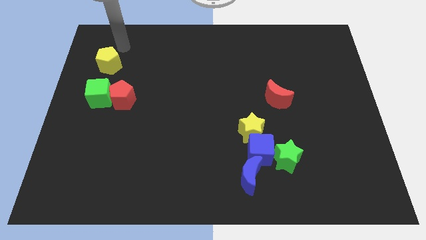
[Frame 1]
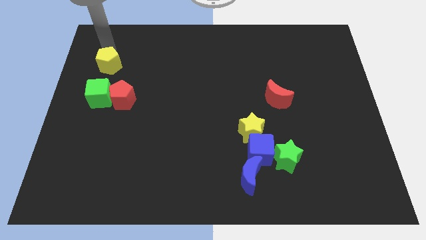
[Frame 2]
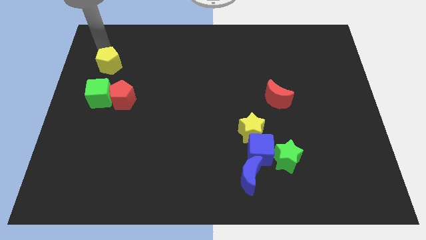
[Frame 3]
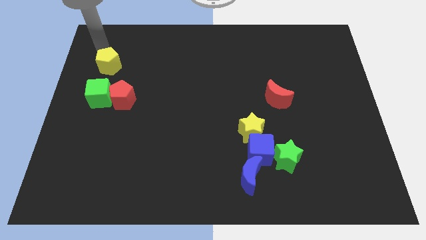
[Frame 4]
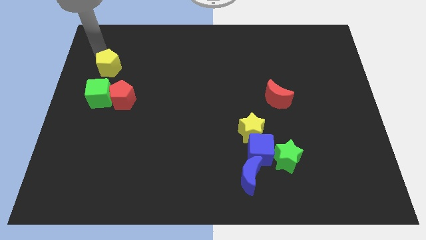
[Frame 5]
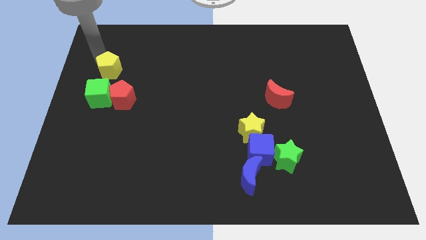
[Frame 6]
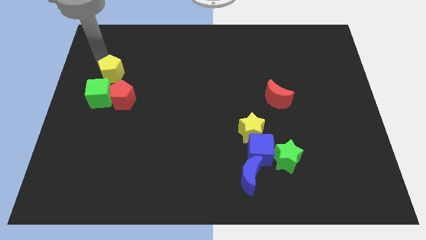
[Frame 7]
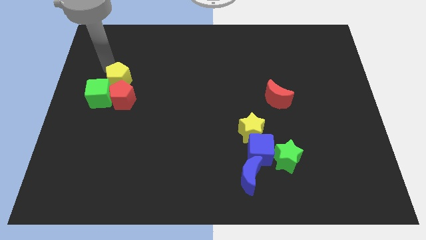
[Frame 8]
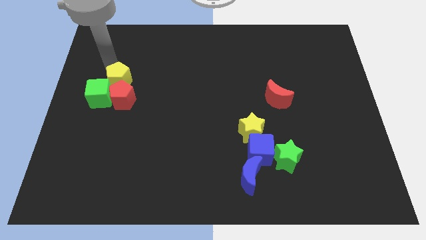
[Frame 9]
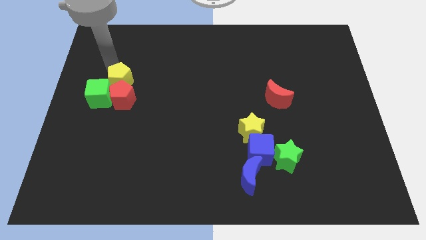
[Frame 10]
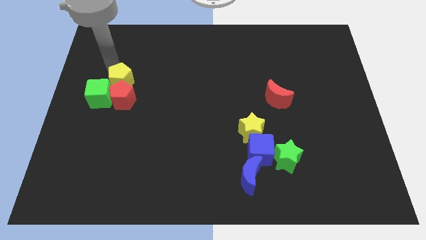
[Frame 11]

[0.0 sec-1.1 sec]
move yellow pentagon into red pentagon

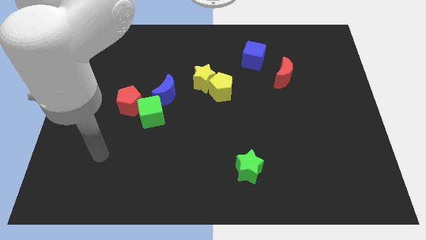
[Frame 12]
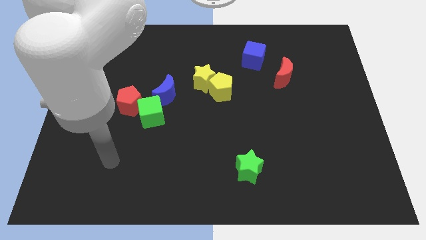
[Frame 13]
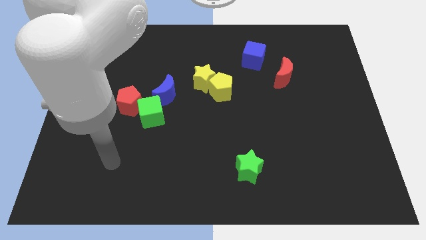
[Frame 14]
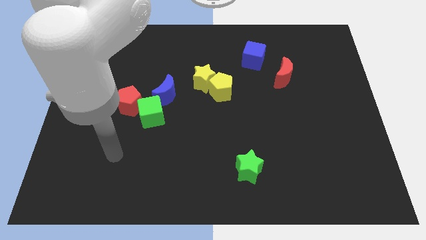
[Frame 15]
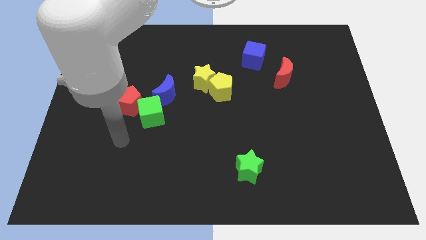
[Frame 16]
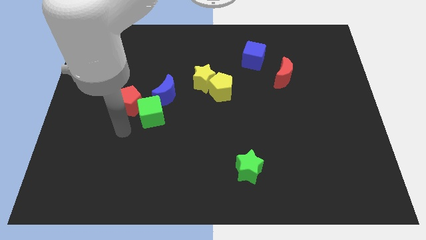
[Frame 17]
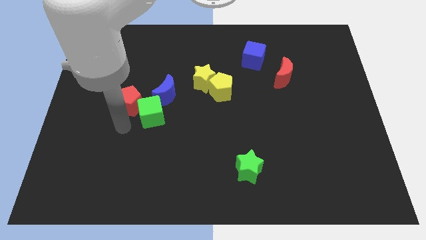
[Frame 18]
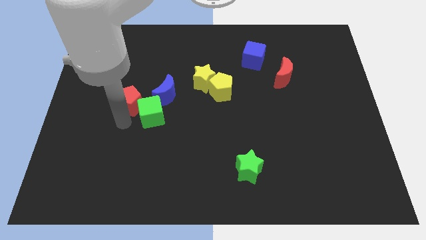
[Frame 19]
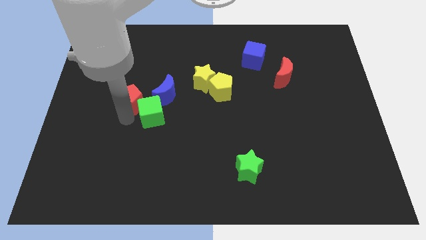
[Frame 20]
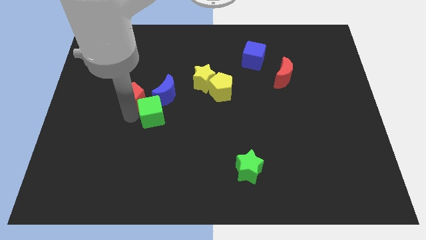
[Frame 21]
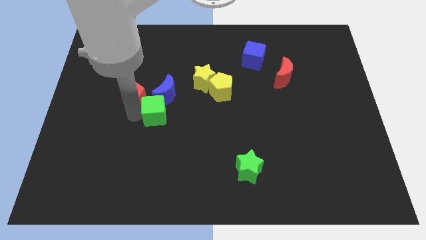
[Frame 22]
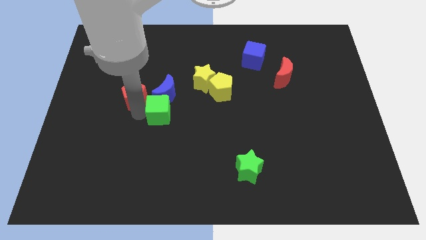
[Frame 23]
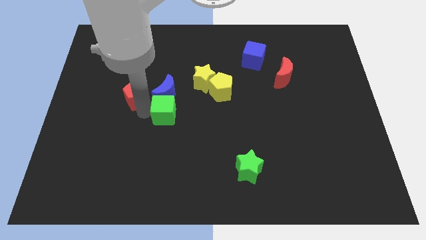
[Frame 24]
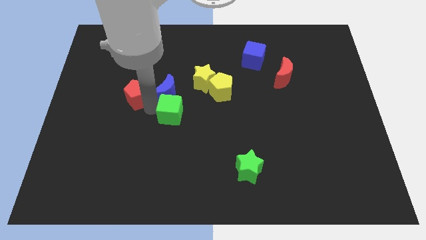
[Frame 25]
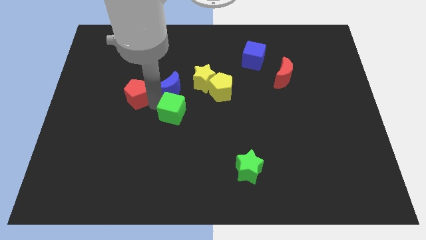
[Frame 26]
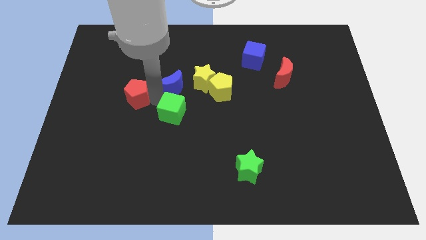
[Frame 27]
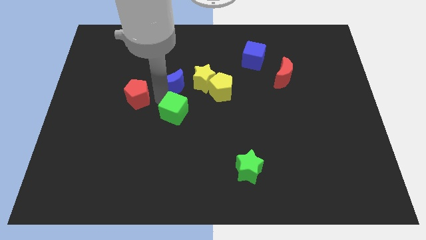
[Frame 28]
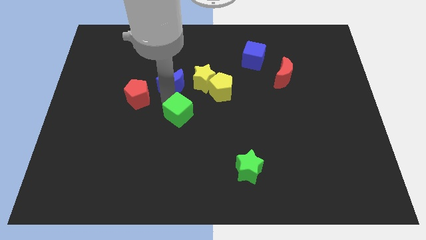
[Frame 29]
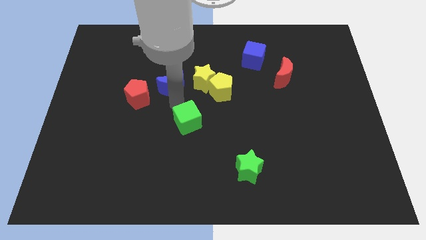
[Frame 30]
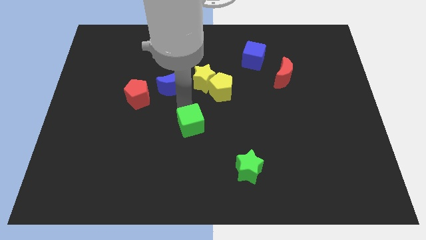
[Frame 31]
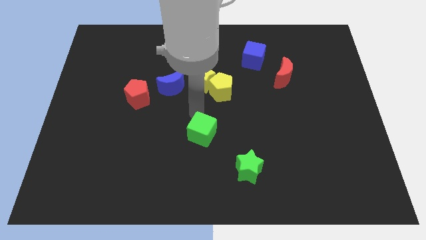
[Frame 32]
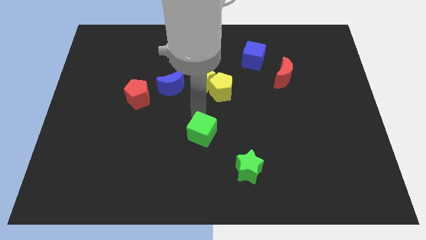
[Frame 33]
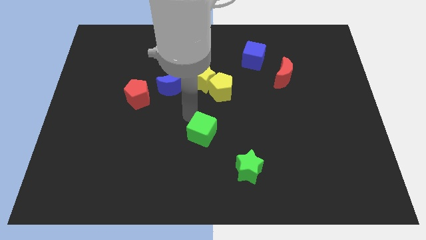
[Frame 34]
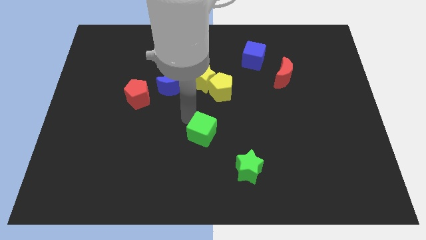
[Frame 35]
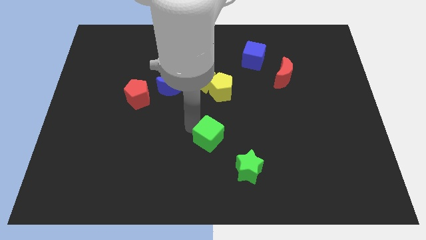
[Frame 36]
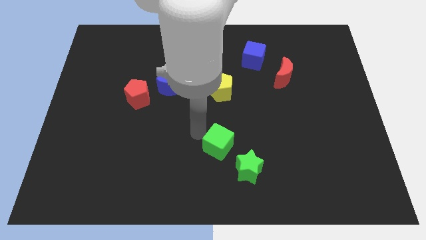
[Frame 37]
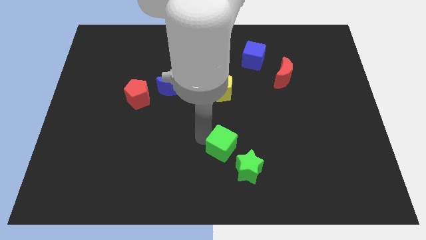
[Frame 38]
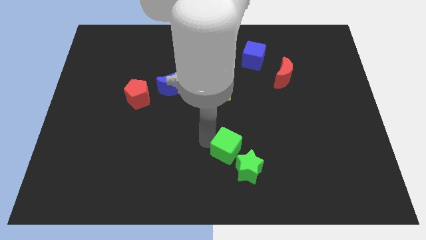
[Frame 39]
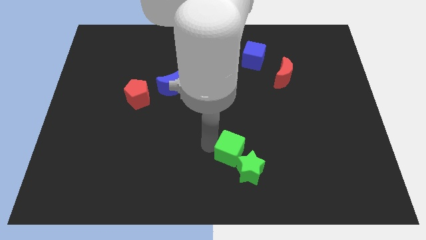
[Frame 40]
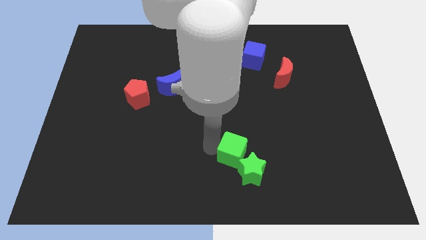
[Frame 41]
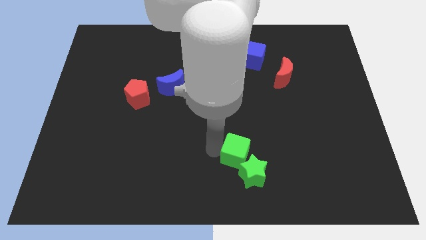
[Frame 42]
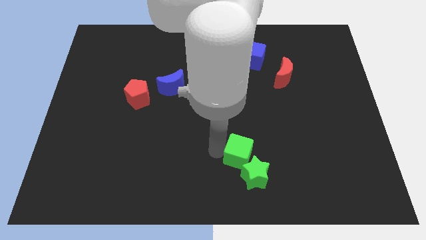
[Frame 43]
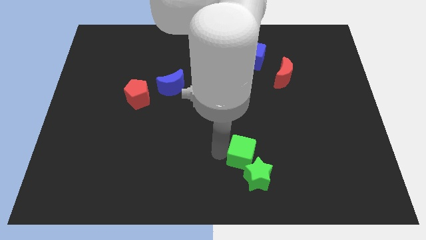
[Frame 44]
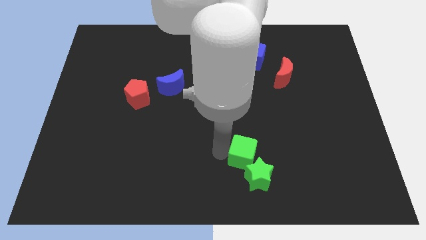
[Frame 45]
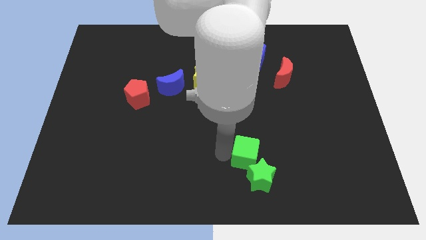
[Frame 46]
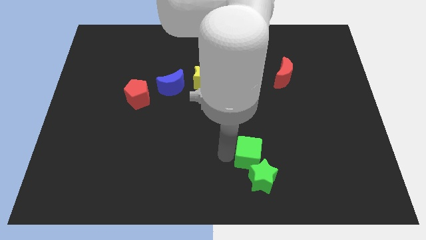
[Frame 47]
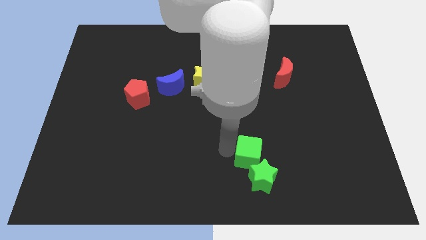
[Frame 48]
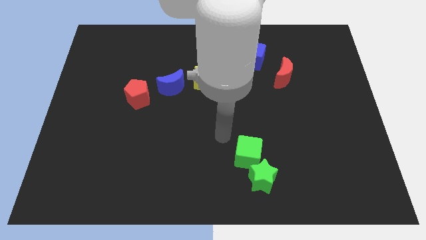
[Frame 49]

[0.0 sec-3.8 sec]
push the green cube into the green star

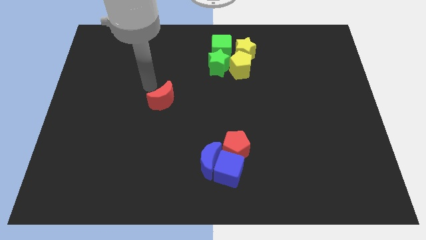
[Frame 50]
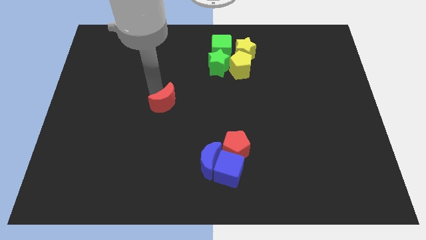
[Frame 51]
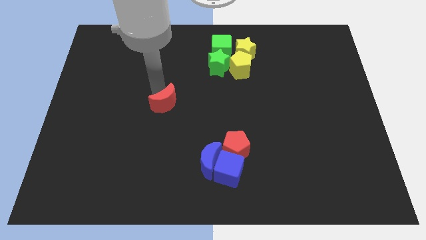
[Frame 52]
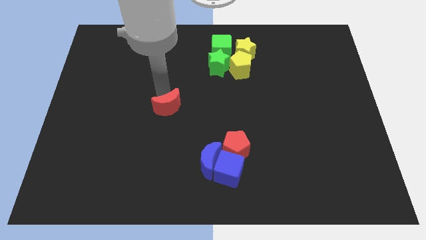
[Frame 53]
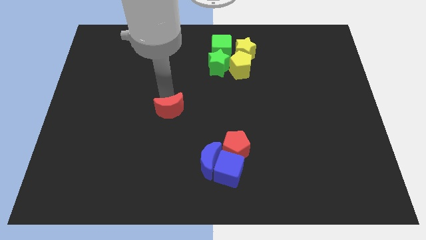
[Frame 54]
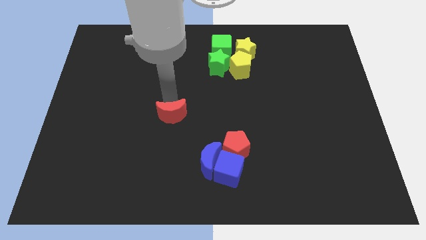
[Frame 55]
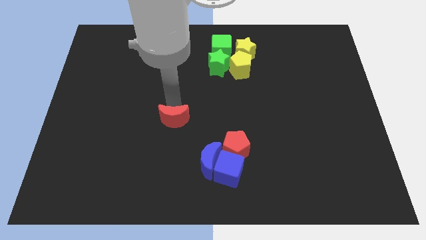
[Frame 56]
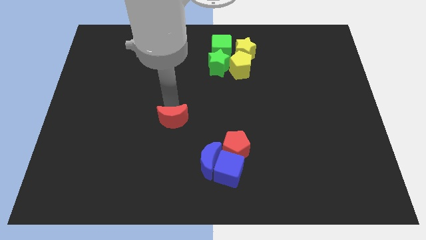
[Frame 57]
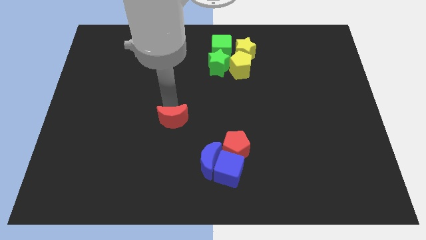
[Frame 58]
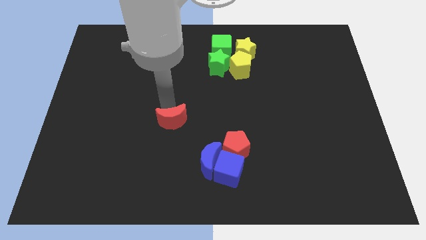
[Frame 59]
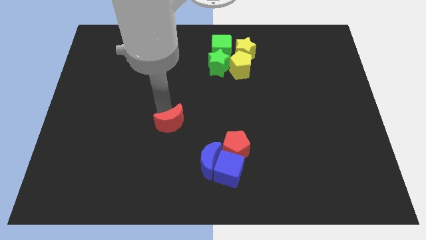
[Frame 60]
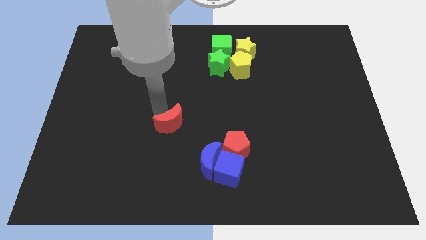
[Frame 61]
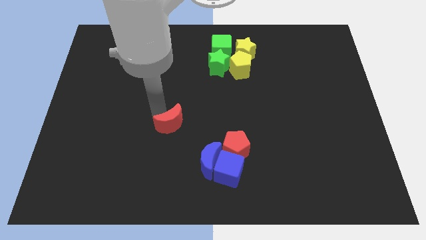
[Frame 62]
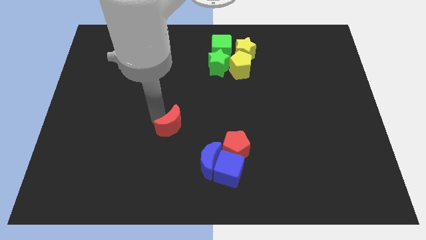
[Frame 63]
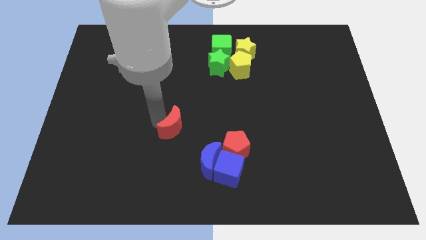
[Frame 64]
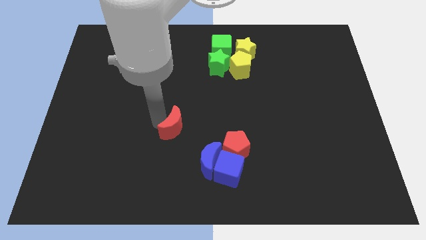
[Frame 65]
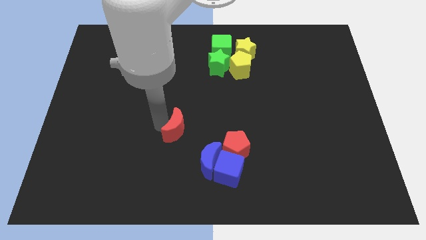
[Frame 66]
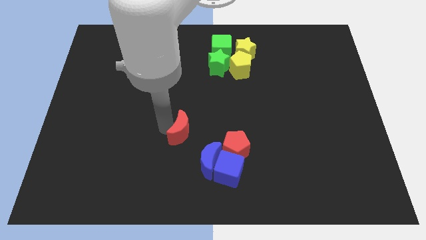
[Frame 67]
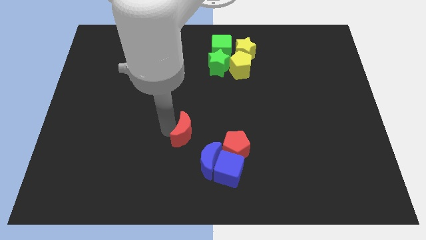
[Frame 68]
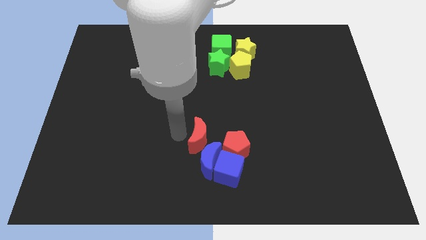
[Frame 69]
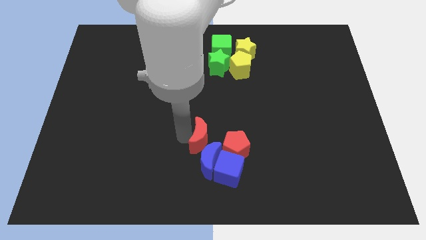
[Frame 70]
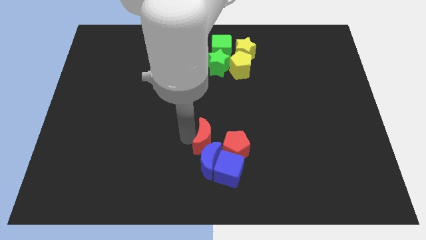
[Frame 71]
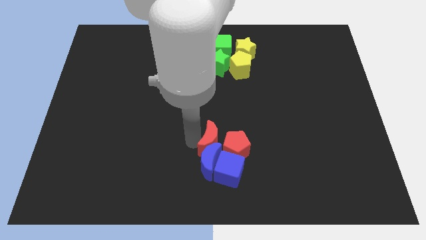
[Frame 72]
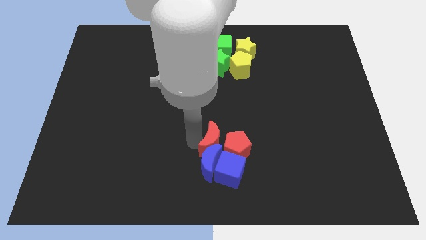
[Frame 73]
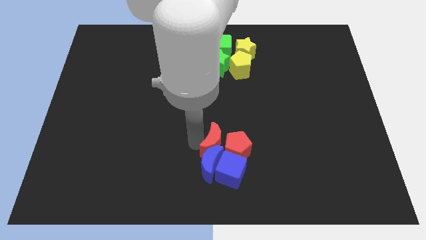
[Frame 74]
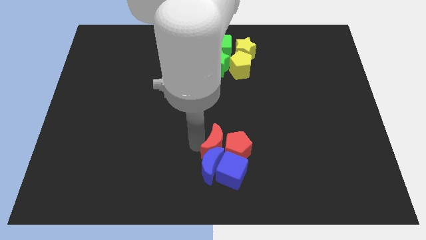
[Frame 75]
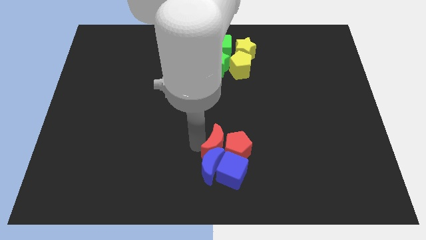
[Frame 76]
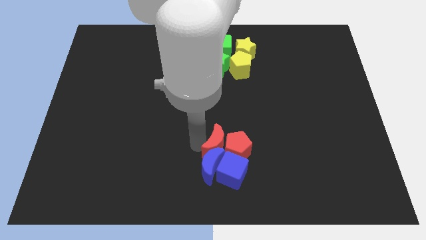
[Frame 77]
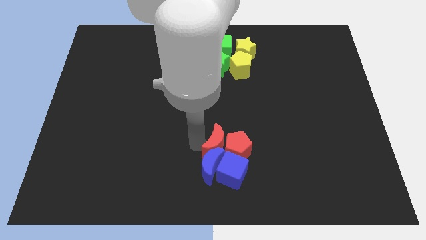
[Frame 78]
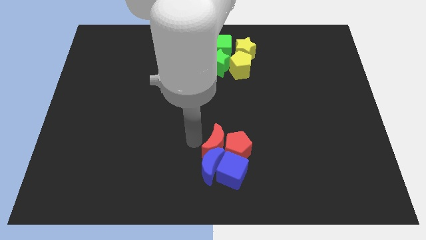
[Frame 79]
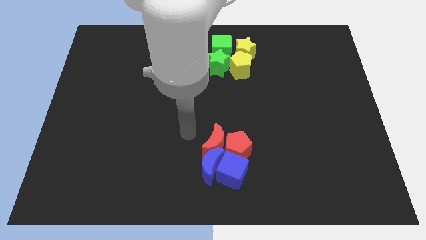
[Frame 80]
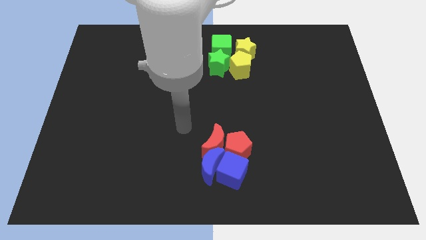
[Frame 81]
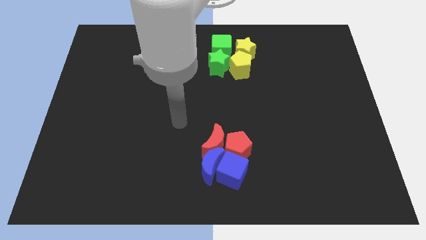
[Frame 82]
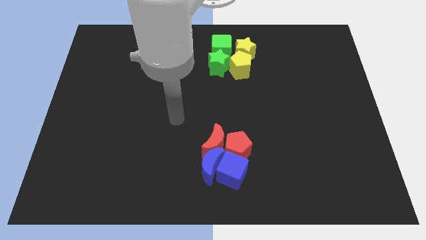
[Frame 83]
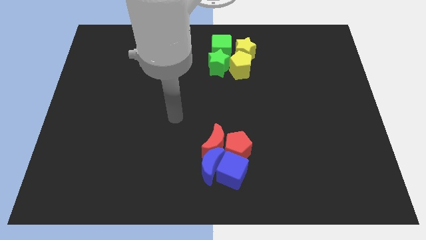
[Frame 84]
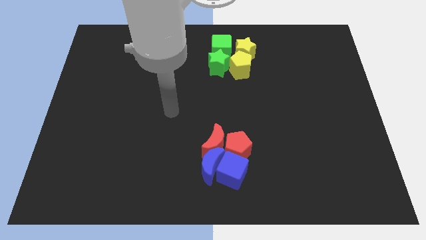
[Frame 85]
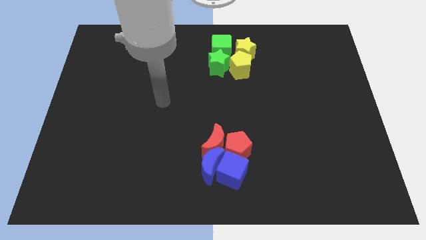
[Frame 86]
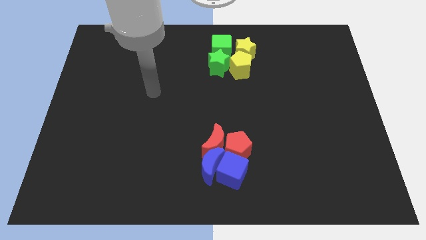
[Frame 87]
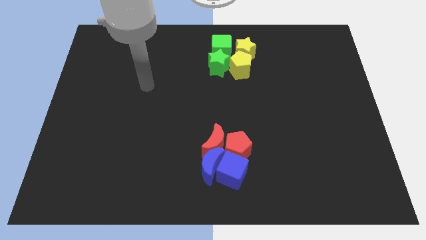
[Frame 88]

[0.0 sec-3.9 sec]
place the red moon left to the red pentagon

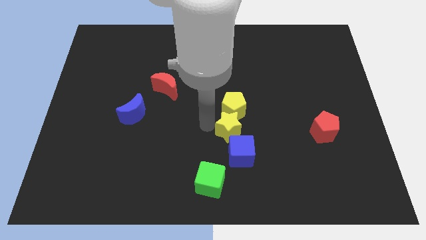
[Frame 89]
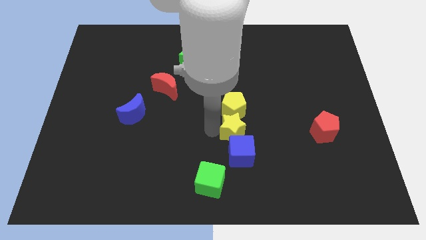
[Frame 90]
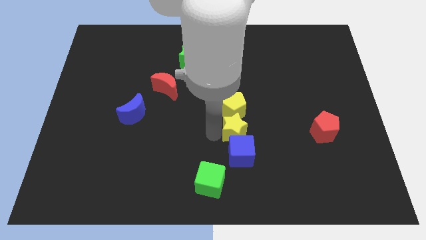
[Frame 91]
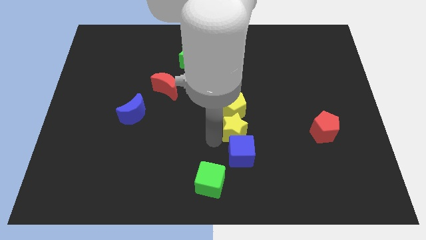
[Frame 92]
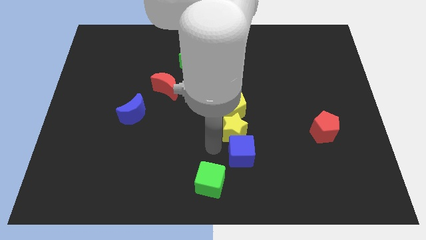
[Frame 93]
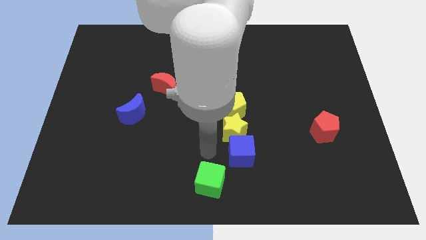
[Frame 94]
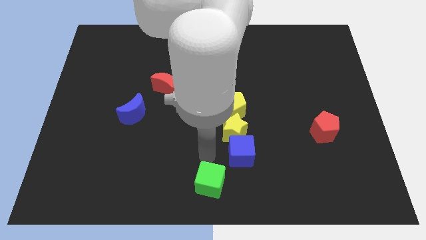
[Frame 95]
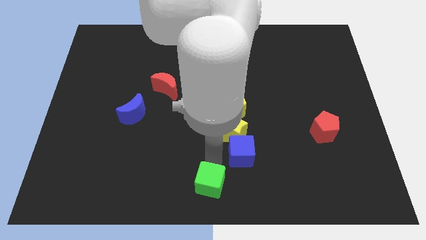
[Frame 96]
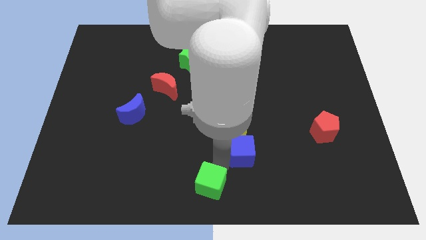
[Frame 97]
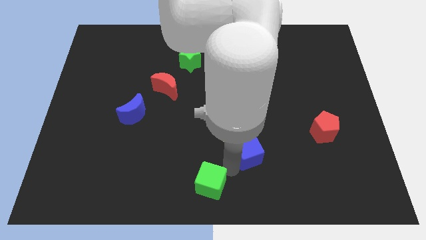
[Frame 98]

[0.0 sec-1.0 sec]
move blue cube slightly towards right side
